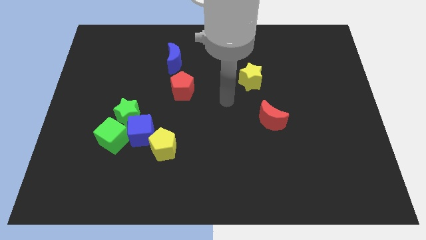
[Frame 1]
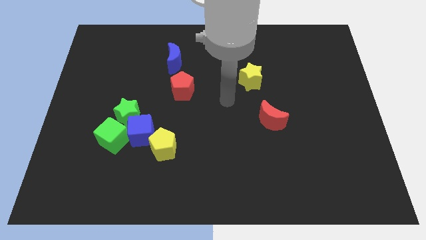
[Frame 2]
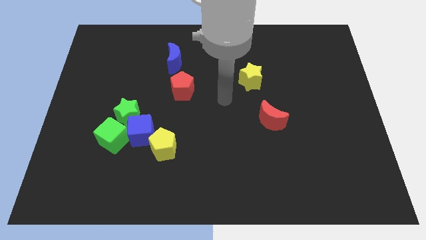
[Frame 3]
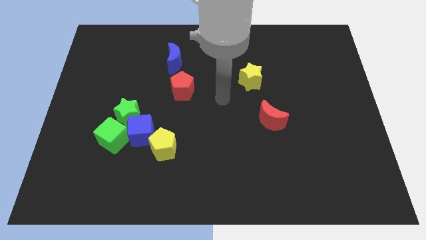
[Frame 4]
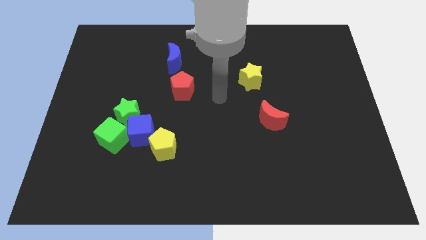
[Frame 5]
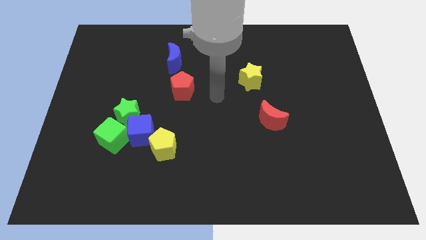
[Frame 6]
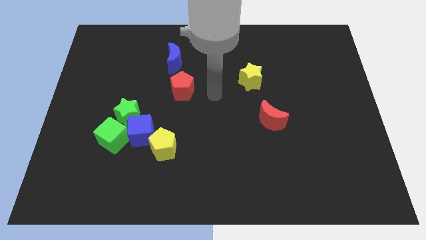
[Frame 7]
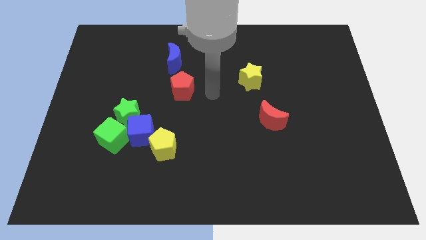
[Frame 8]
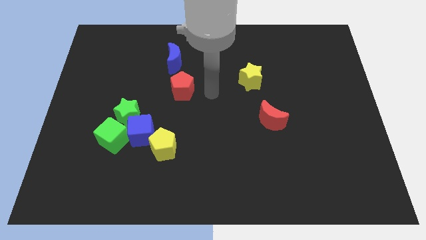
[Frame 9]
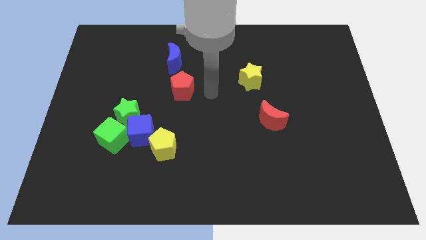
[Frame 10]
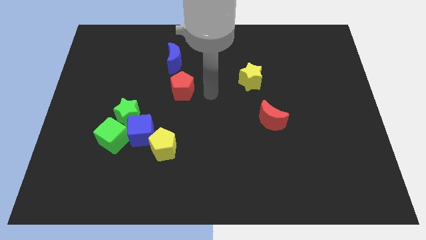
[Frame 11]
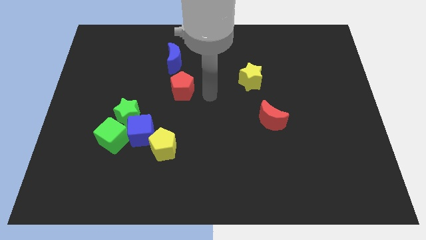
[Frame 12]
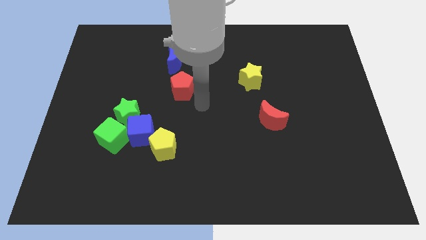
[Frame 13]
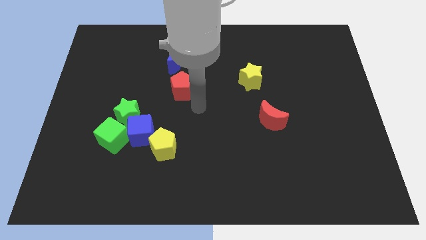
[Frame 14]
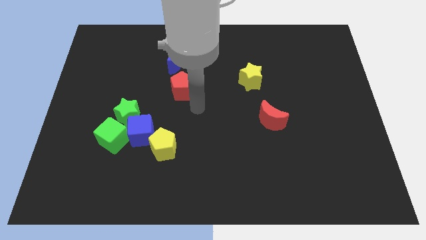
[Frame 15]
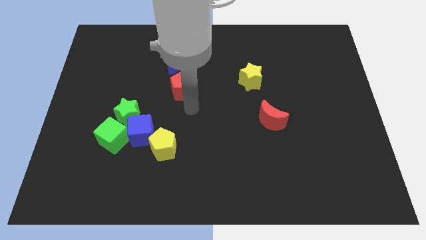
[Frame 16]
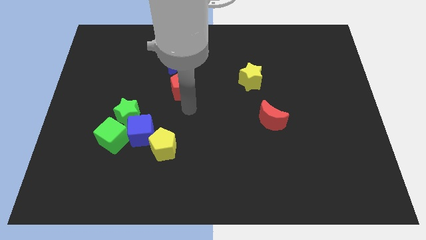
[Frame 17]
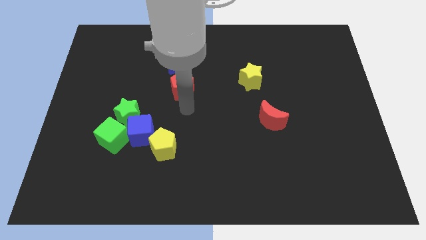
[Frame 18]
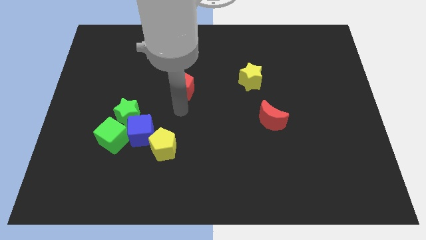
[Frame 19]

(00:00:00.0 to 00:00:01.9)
place arm below red pentagon

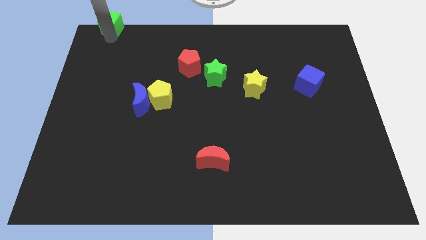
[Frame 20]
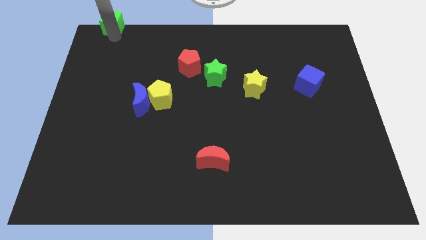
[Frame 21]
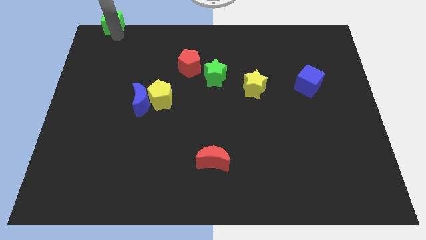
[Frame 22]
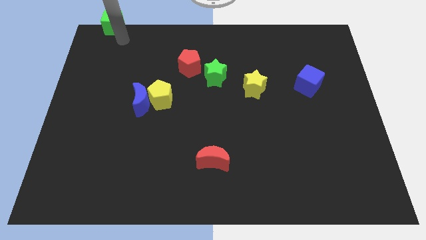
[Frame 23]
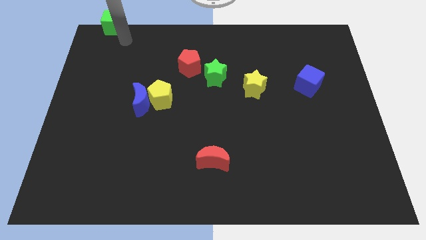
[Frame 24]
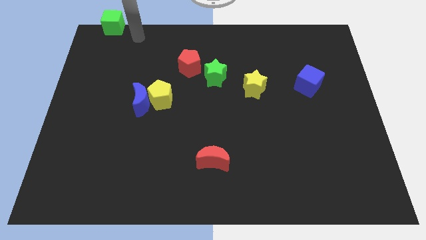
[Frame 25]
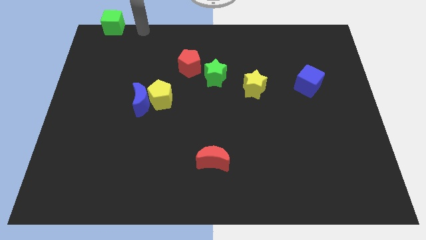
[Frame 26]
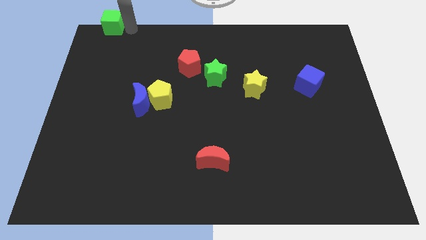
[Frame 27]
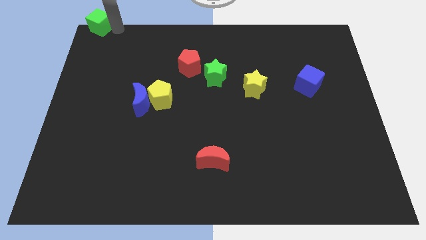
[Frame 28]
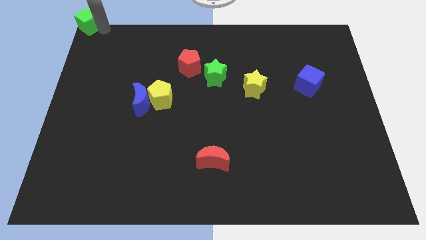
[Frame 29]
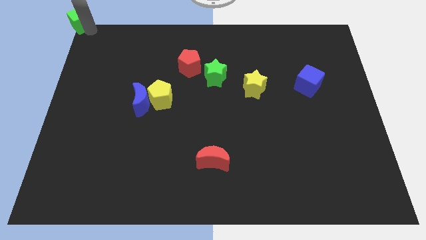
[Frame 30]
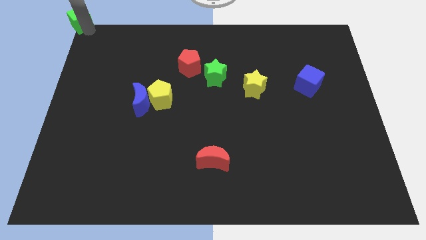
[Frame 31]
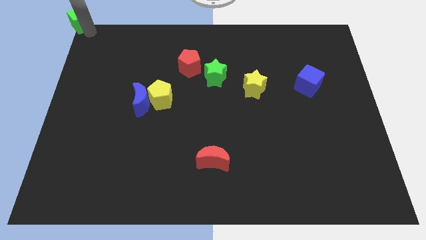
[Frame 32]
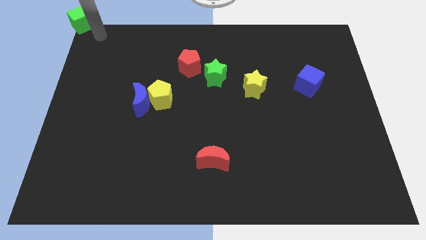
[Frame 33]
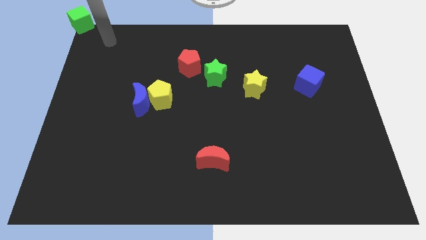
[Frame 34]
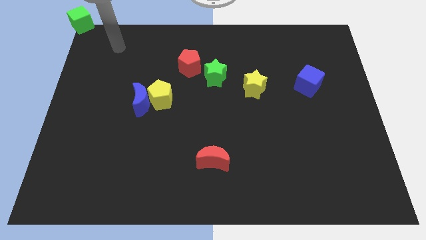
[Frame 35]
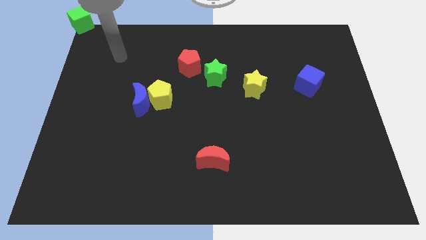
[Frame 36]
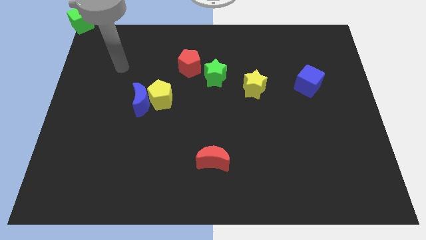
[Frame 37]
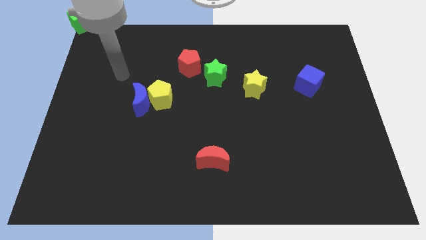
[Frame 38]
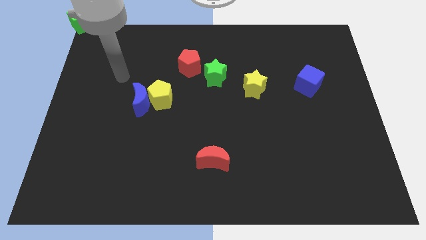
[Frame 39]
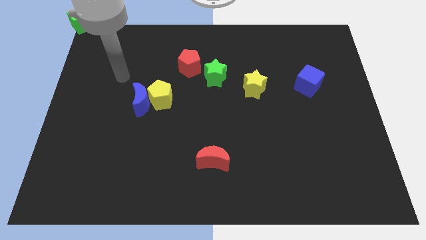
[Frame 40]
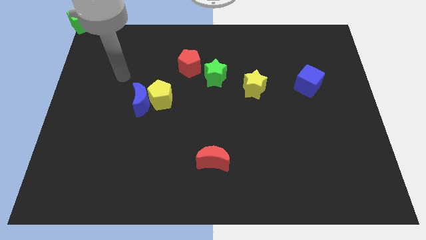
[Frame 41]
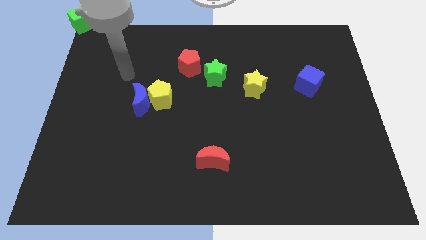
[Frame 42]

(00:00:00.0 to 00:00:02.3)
push the green cube towards the top left corner

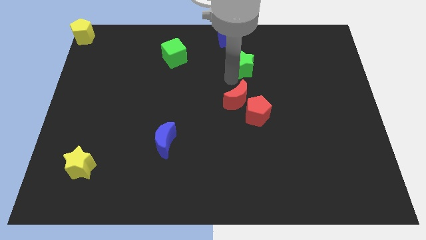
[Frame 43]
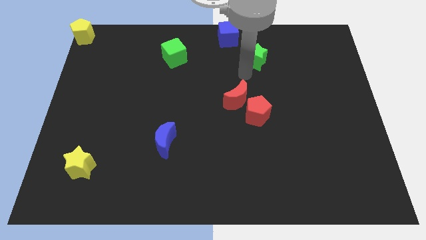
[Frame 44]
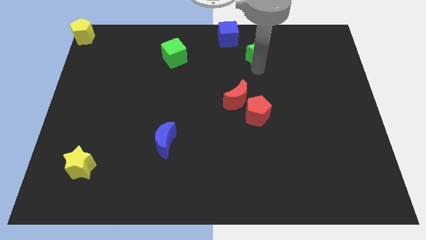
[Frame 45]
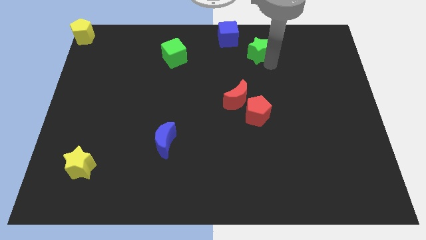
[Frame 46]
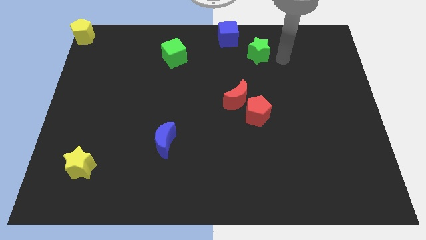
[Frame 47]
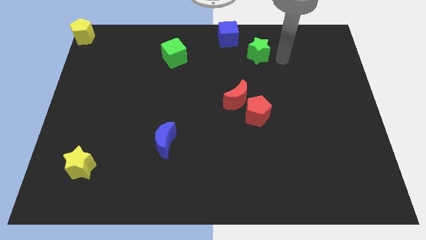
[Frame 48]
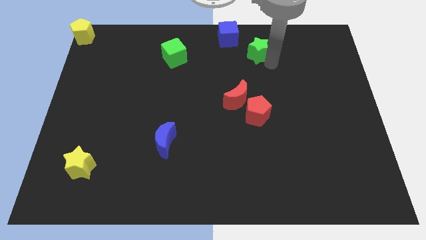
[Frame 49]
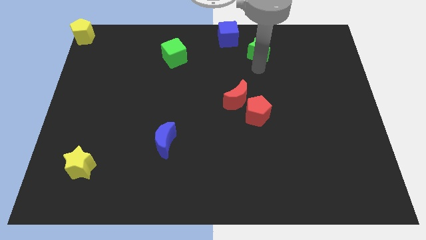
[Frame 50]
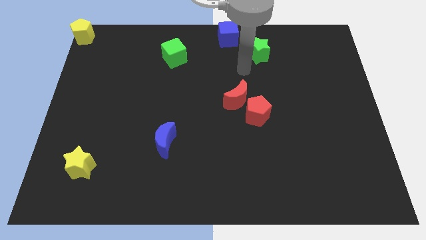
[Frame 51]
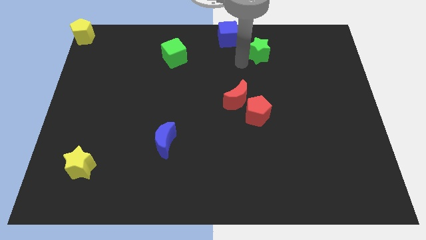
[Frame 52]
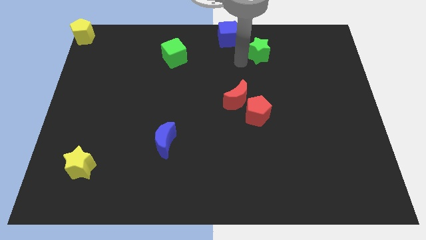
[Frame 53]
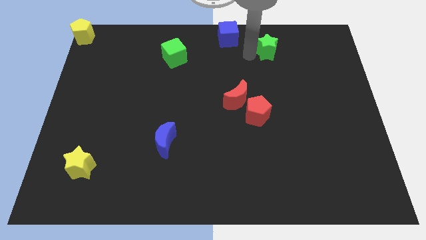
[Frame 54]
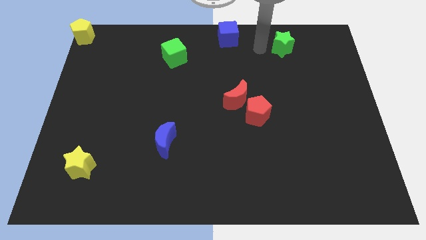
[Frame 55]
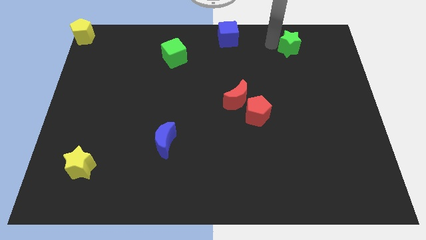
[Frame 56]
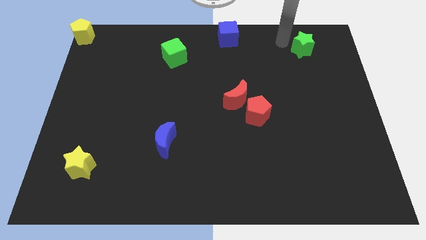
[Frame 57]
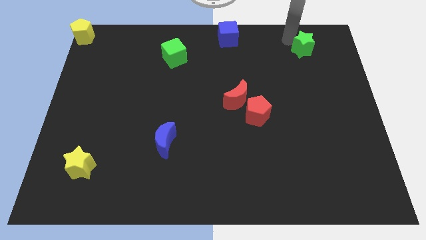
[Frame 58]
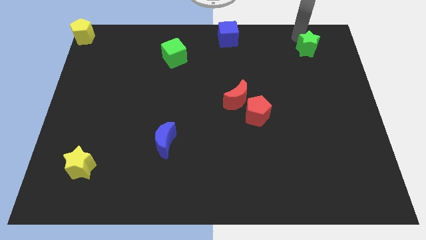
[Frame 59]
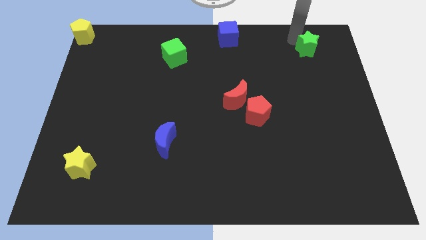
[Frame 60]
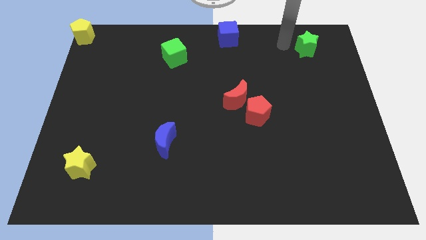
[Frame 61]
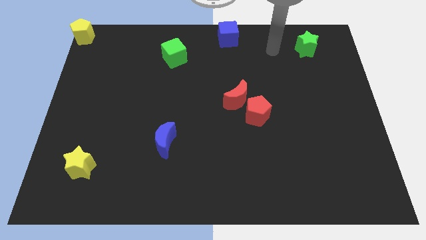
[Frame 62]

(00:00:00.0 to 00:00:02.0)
push the green star towards the top right side of the board

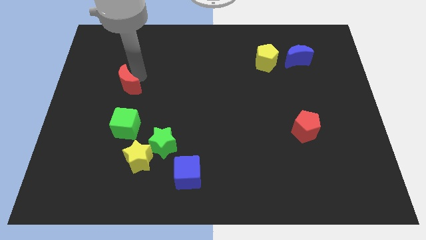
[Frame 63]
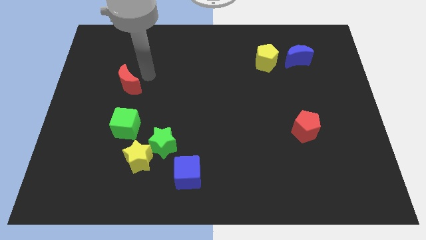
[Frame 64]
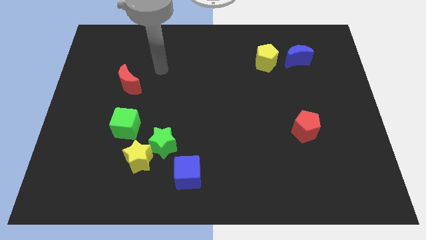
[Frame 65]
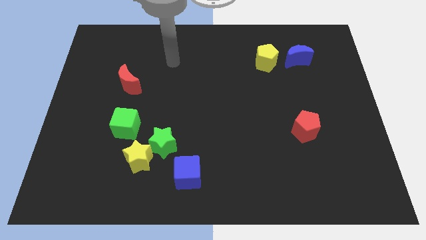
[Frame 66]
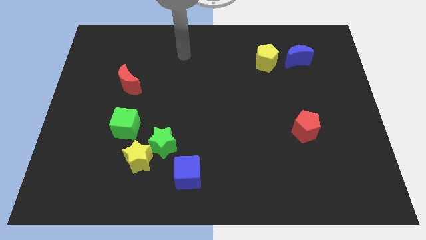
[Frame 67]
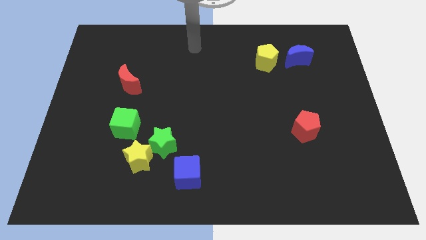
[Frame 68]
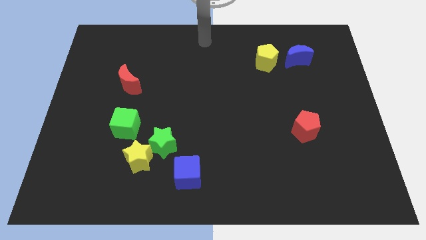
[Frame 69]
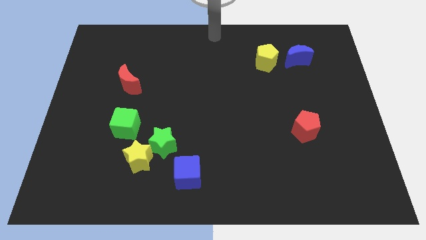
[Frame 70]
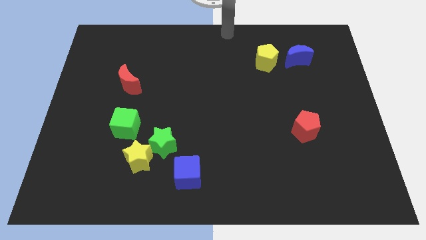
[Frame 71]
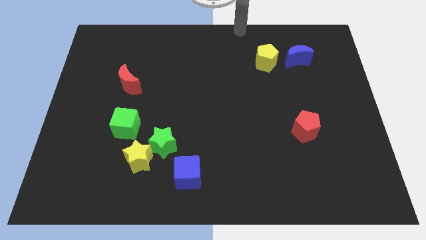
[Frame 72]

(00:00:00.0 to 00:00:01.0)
move the arm away from the red moon

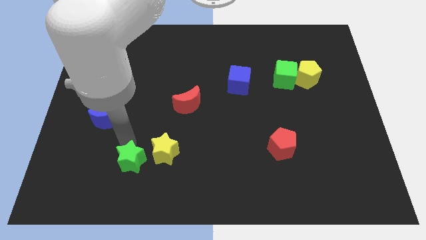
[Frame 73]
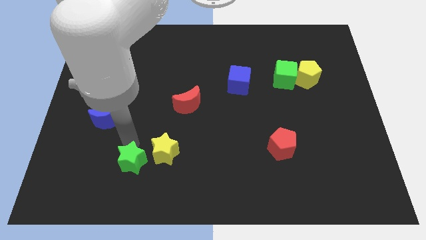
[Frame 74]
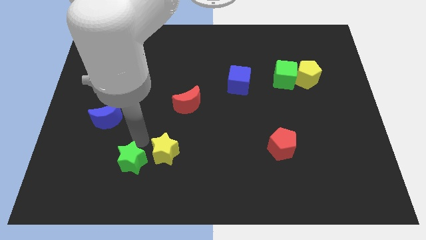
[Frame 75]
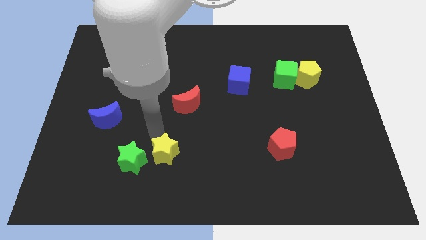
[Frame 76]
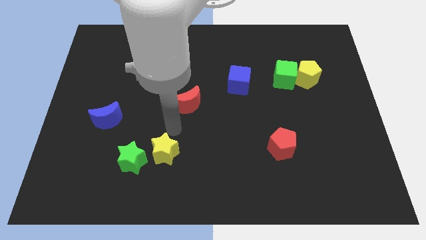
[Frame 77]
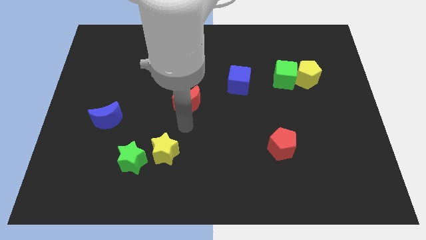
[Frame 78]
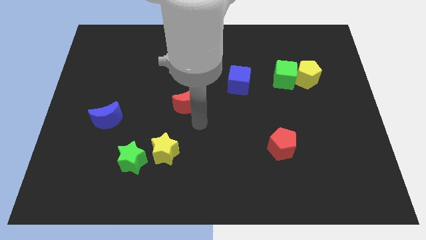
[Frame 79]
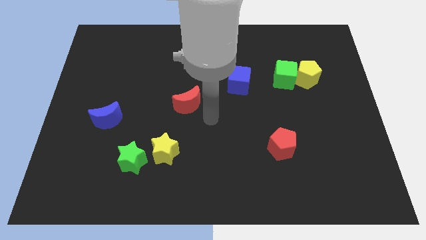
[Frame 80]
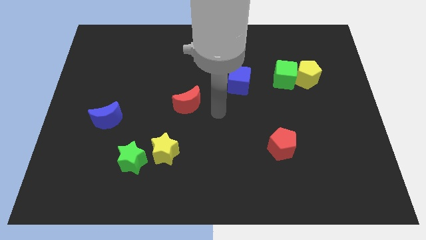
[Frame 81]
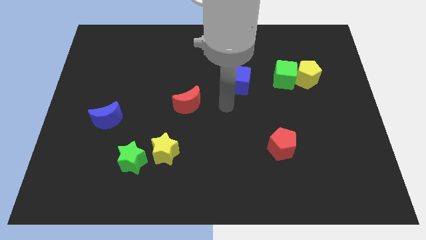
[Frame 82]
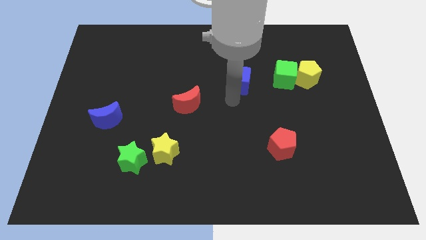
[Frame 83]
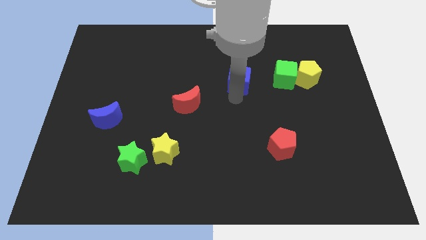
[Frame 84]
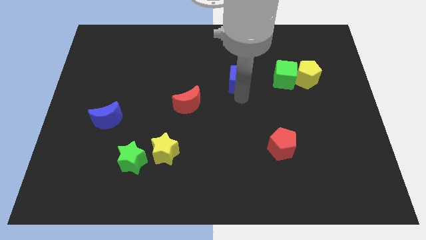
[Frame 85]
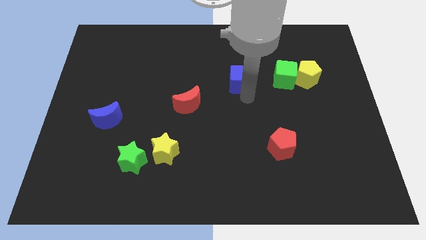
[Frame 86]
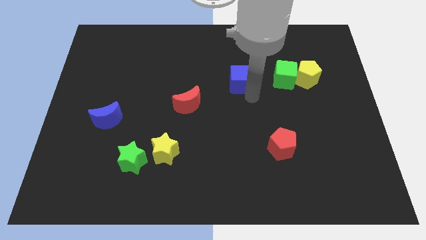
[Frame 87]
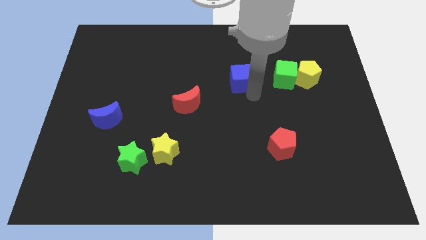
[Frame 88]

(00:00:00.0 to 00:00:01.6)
move arm near blue cube

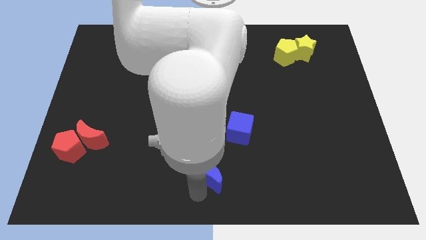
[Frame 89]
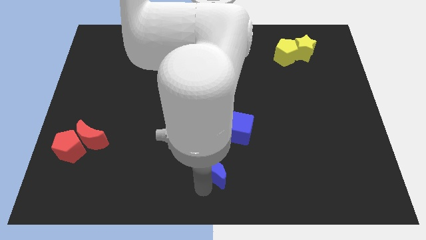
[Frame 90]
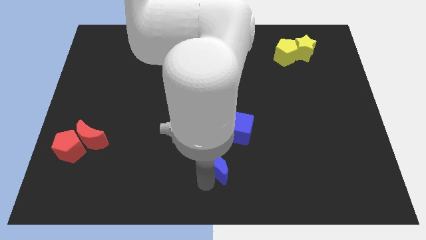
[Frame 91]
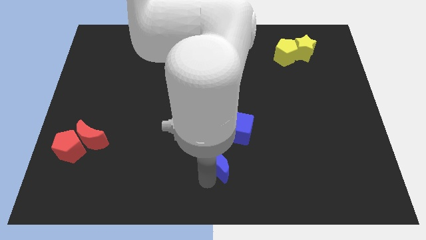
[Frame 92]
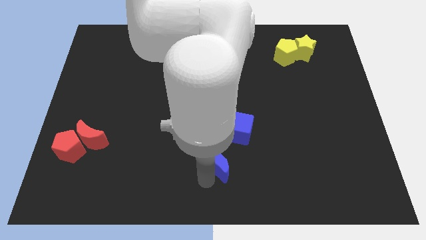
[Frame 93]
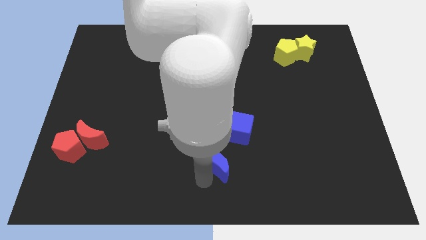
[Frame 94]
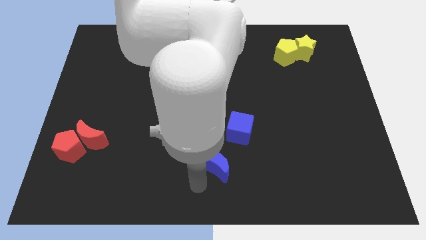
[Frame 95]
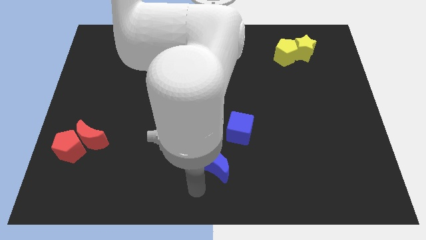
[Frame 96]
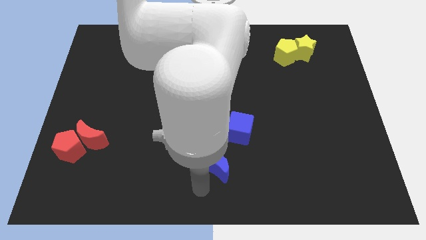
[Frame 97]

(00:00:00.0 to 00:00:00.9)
place the blue crescent below the blue cube
